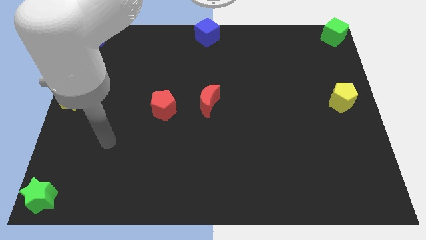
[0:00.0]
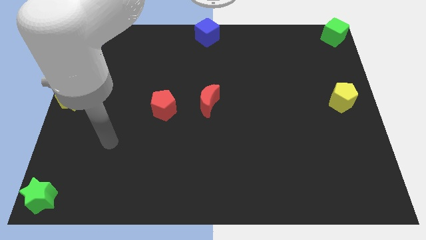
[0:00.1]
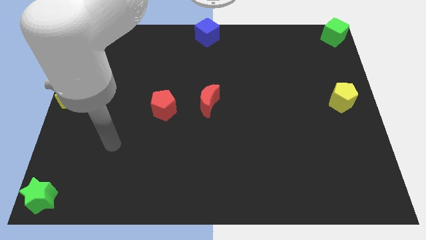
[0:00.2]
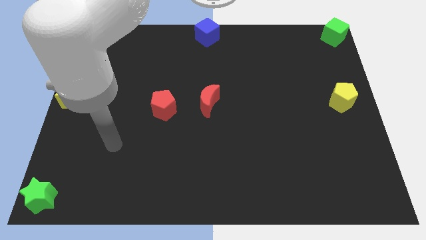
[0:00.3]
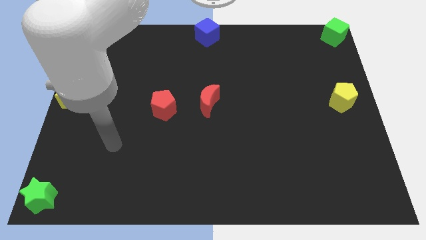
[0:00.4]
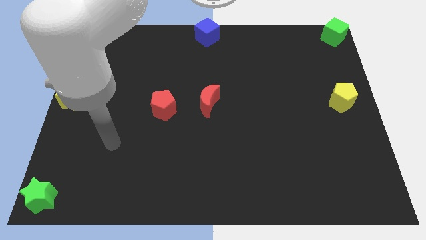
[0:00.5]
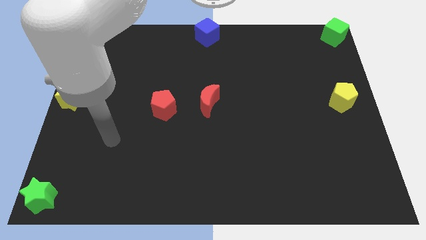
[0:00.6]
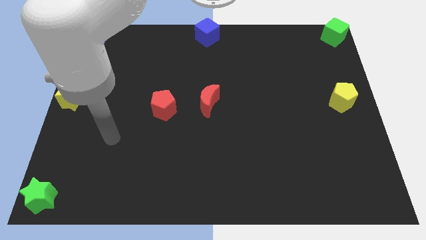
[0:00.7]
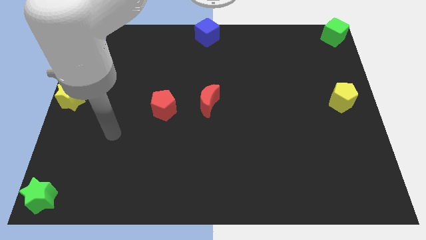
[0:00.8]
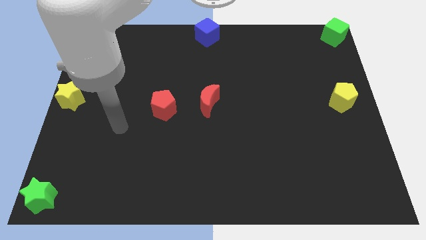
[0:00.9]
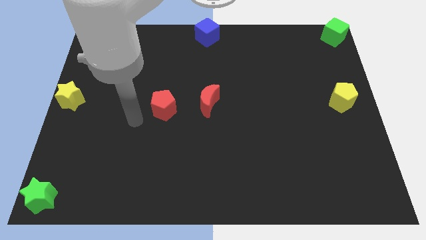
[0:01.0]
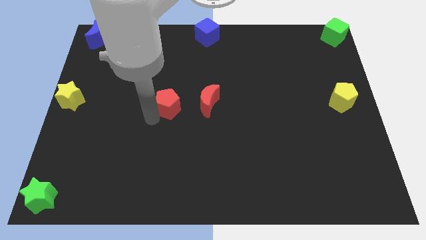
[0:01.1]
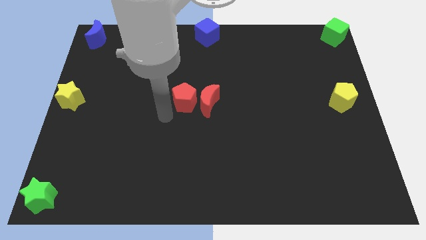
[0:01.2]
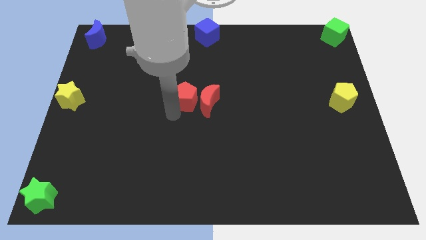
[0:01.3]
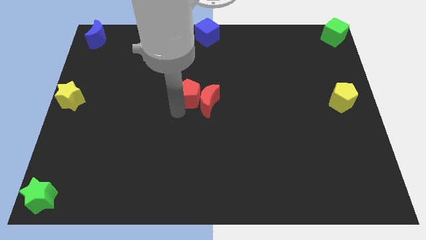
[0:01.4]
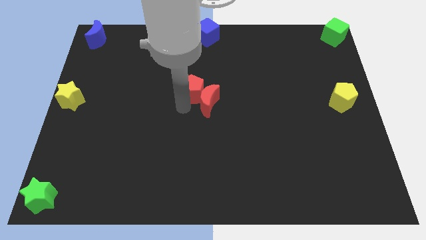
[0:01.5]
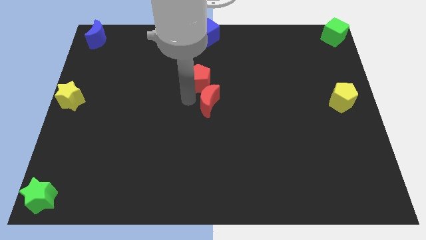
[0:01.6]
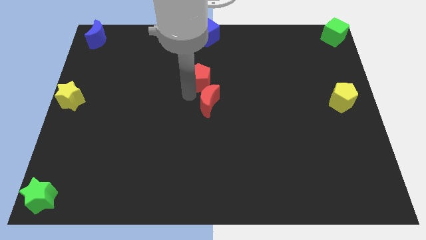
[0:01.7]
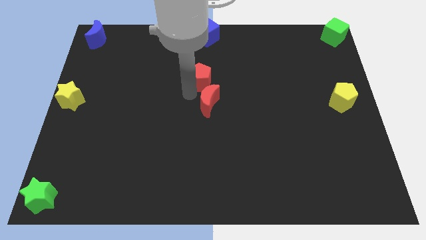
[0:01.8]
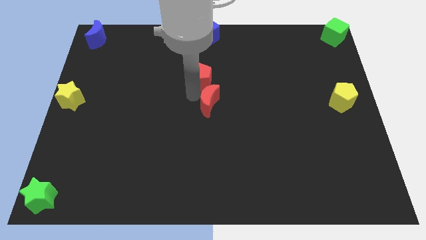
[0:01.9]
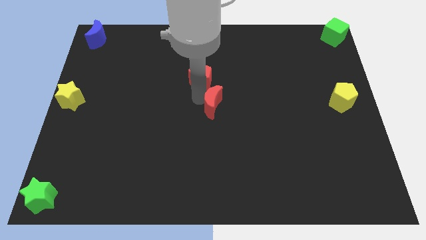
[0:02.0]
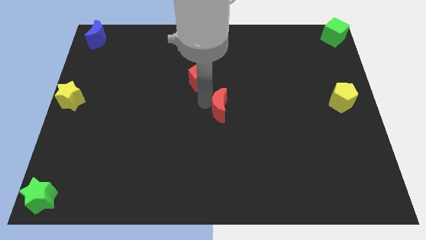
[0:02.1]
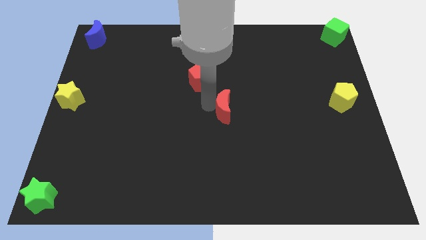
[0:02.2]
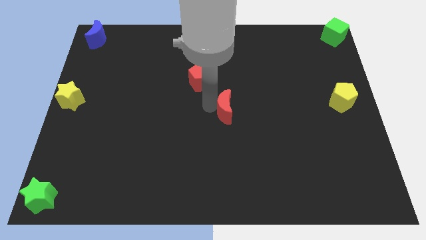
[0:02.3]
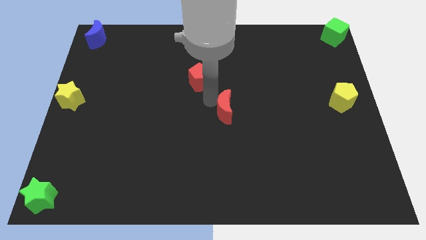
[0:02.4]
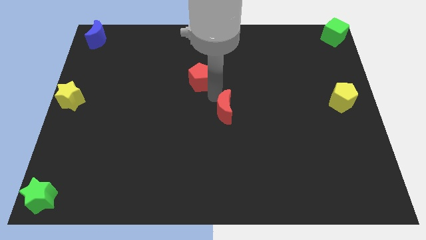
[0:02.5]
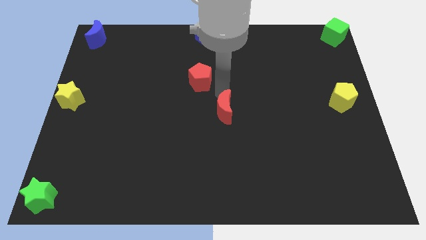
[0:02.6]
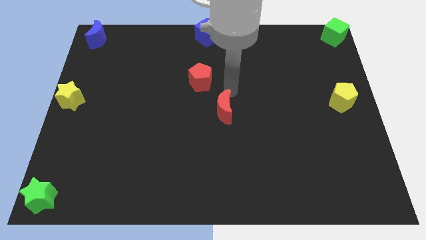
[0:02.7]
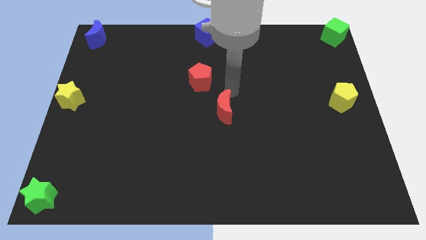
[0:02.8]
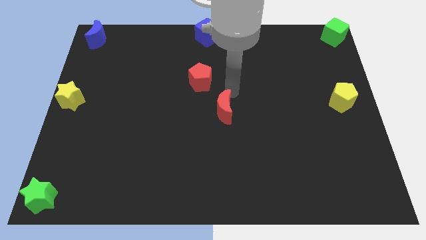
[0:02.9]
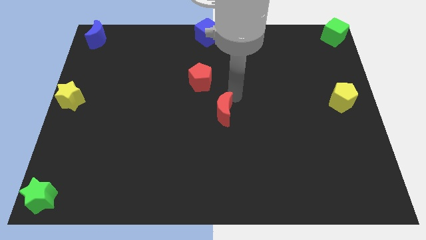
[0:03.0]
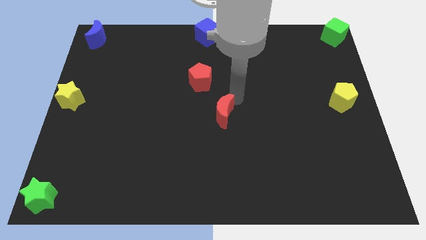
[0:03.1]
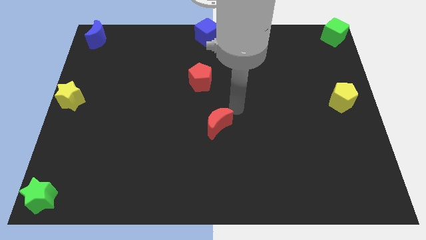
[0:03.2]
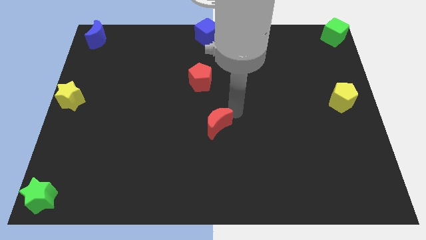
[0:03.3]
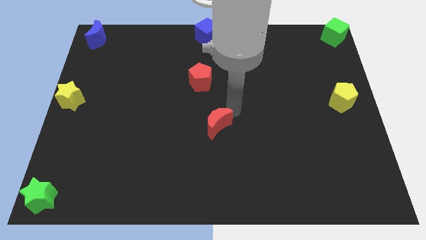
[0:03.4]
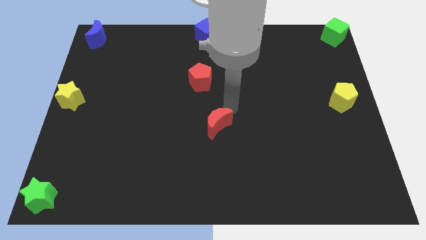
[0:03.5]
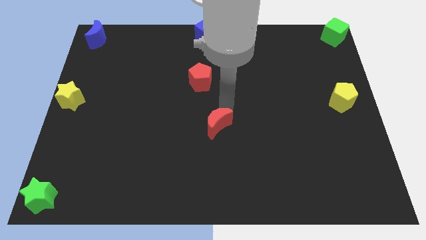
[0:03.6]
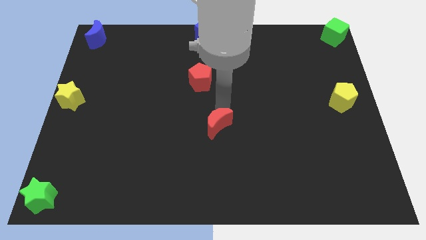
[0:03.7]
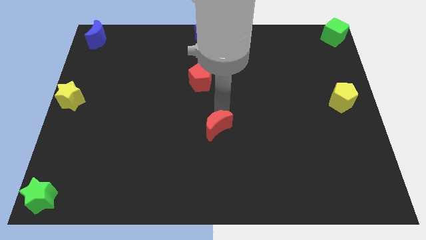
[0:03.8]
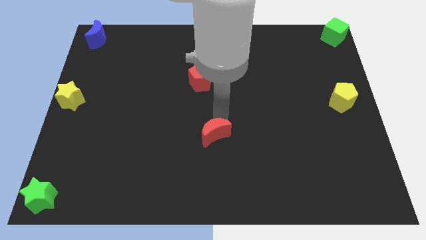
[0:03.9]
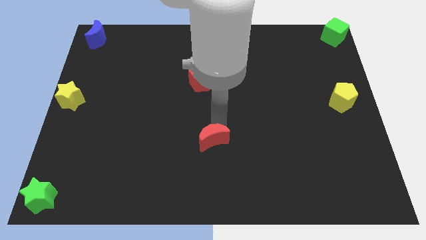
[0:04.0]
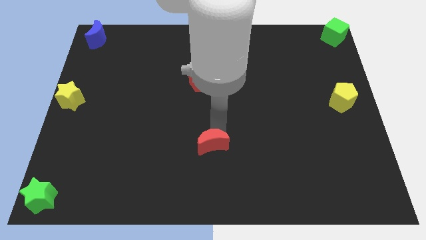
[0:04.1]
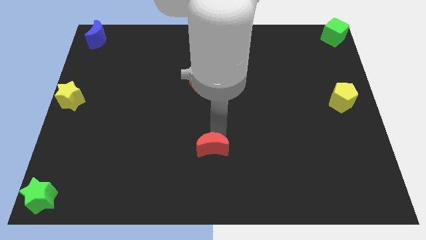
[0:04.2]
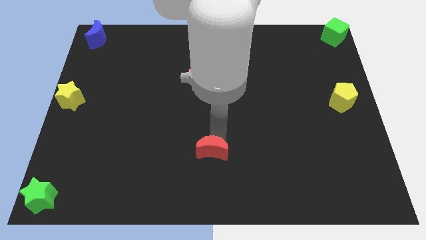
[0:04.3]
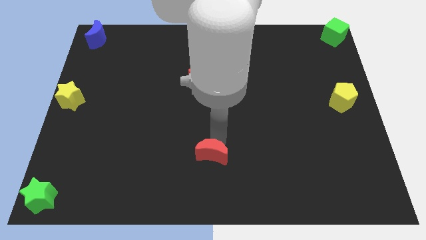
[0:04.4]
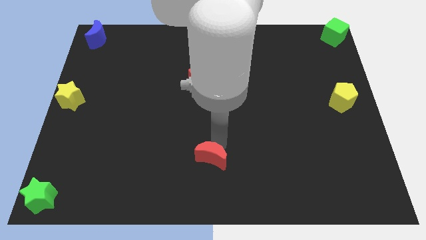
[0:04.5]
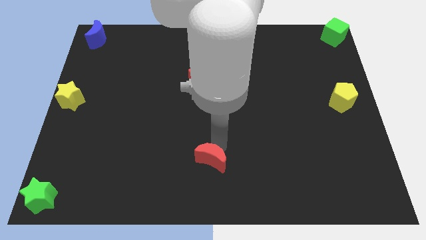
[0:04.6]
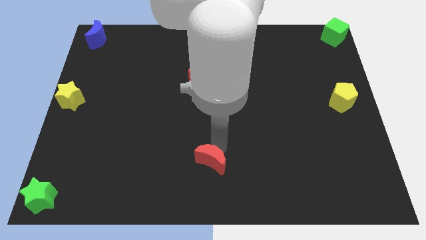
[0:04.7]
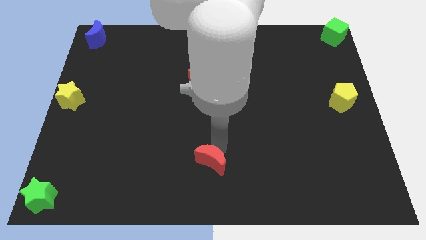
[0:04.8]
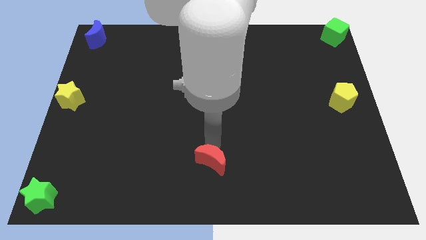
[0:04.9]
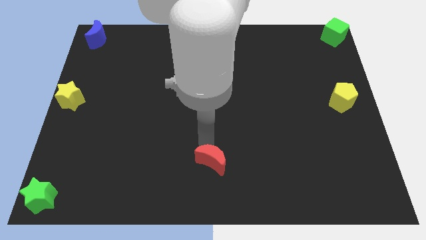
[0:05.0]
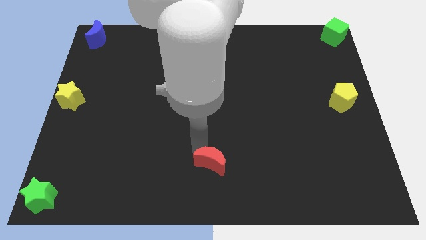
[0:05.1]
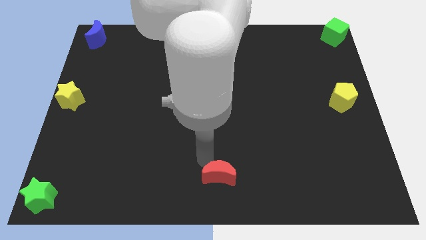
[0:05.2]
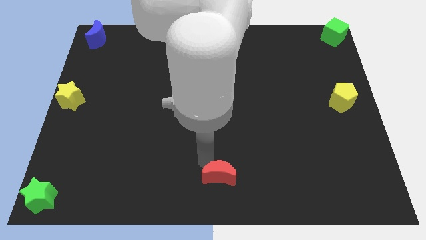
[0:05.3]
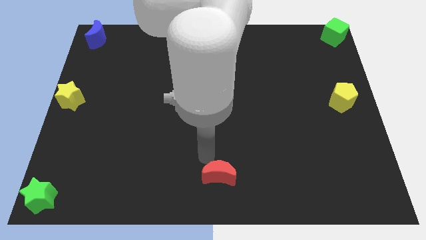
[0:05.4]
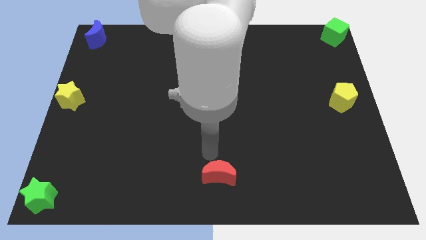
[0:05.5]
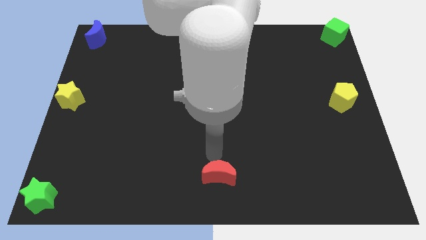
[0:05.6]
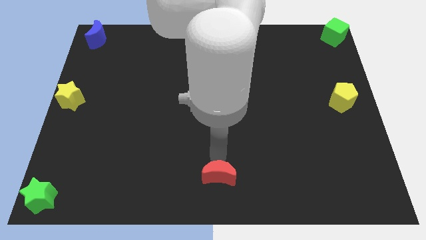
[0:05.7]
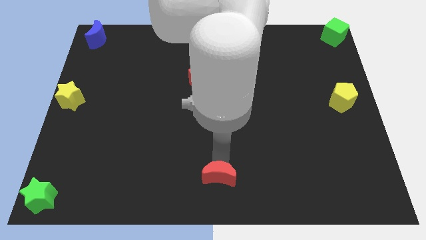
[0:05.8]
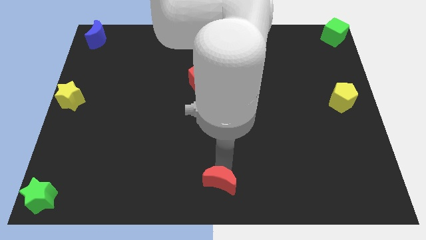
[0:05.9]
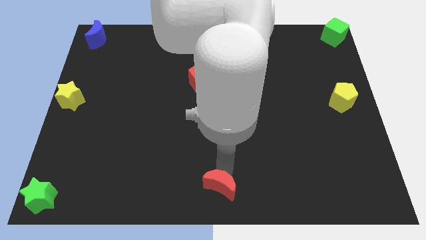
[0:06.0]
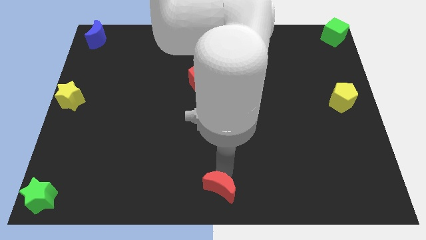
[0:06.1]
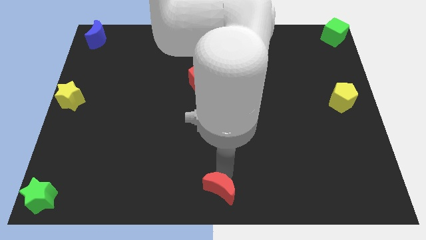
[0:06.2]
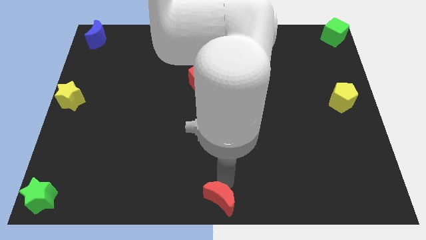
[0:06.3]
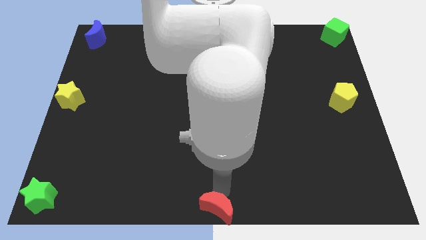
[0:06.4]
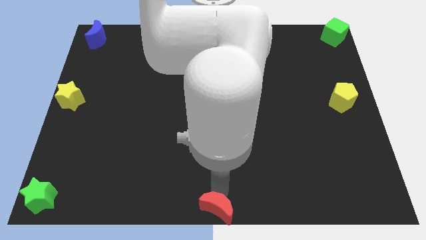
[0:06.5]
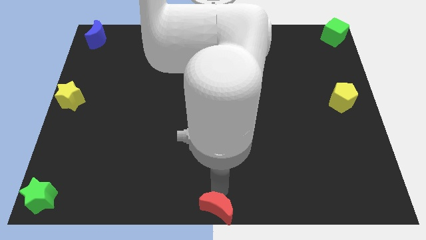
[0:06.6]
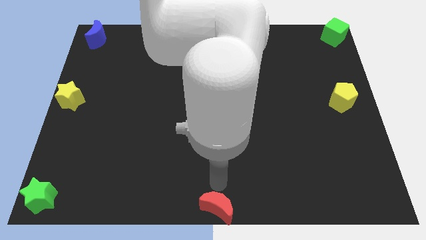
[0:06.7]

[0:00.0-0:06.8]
move the red crescent to the bottom centre of the board

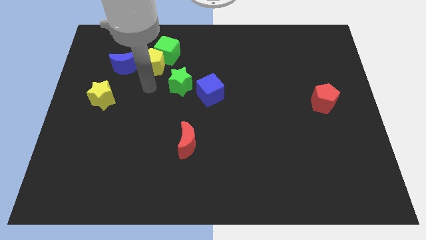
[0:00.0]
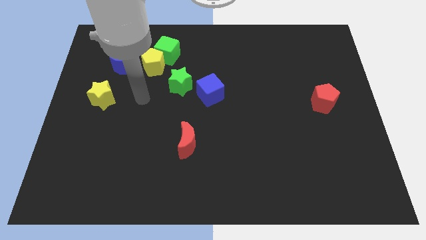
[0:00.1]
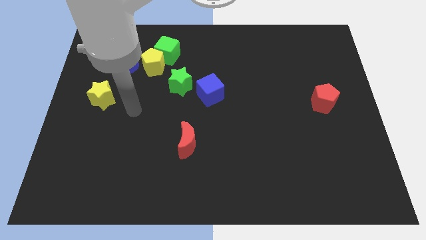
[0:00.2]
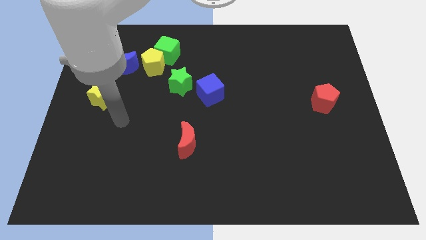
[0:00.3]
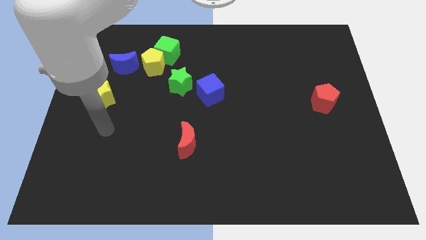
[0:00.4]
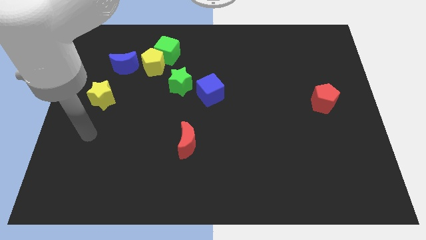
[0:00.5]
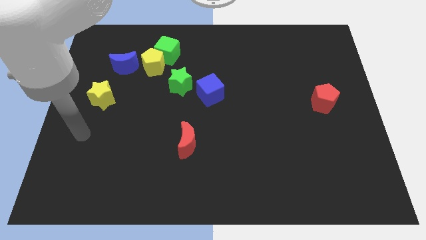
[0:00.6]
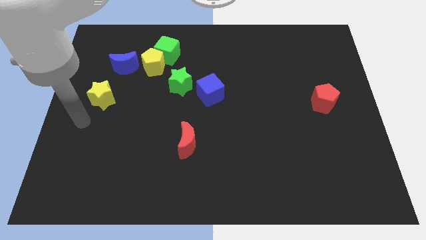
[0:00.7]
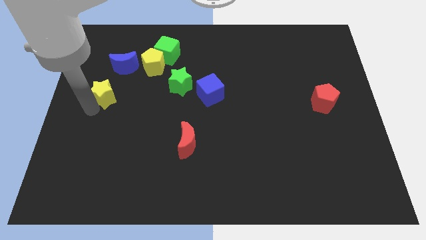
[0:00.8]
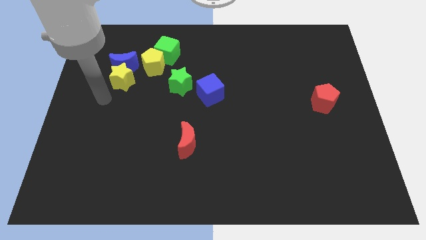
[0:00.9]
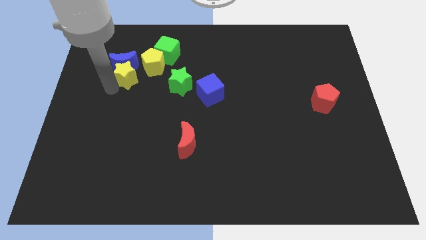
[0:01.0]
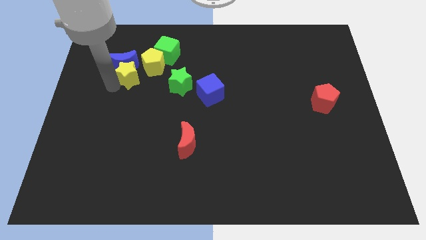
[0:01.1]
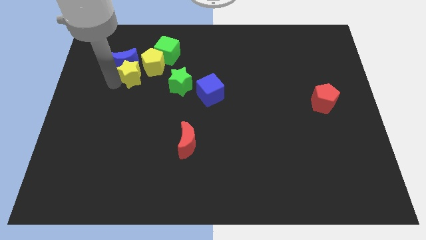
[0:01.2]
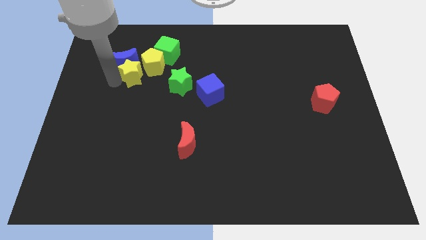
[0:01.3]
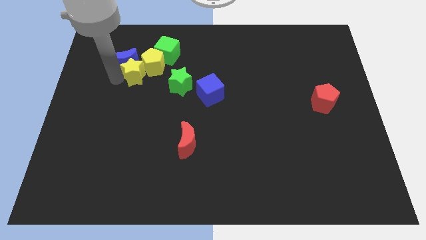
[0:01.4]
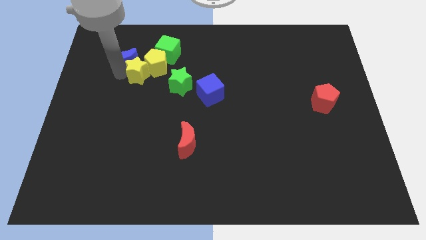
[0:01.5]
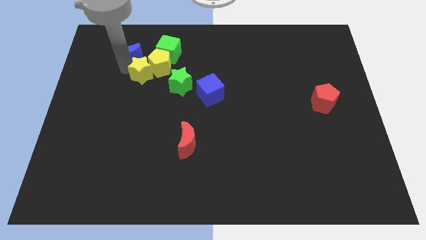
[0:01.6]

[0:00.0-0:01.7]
push the yellow star into yellow pentagon at the bottom

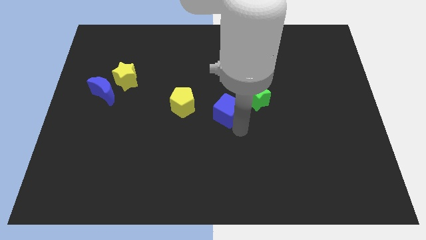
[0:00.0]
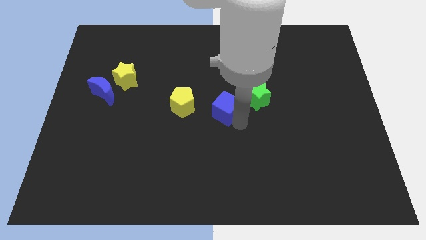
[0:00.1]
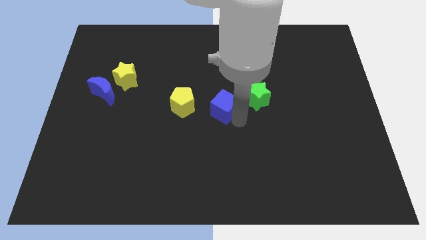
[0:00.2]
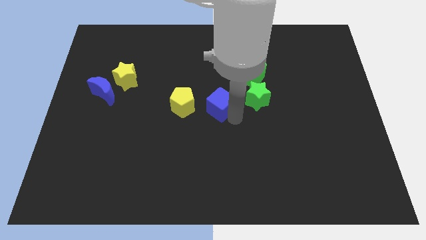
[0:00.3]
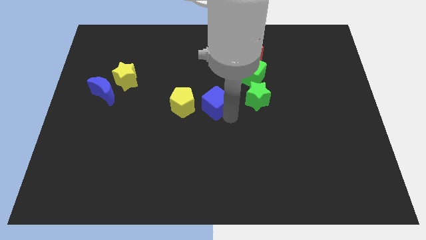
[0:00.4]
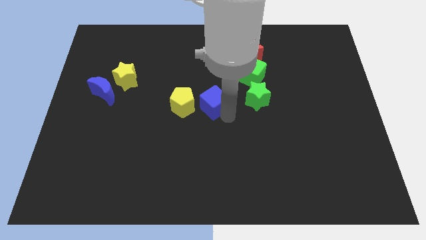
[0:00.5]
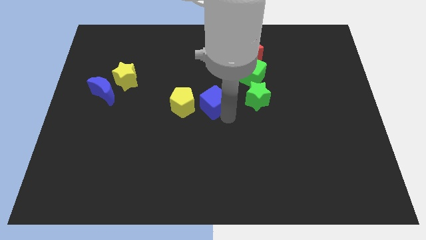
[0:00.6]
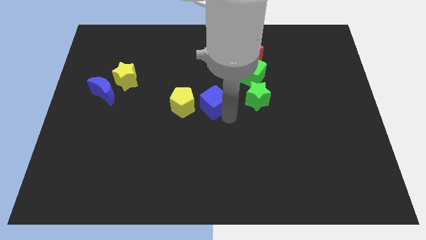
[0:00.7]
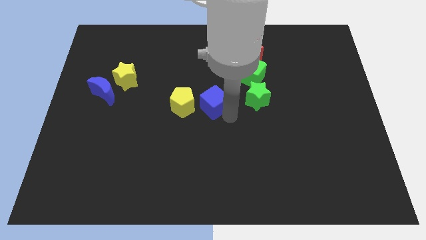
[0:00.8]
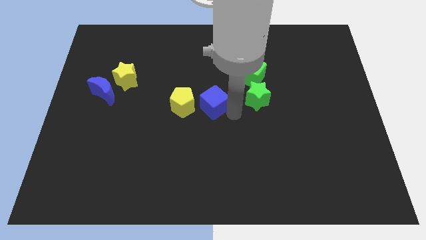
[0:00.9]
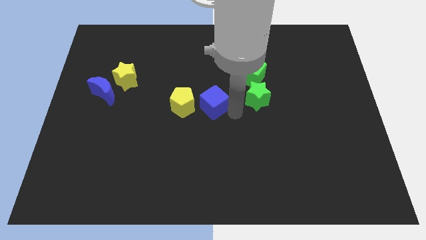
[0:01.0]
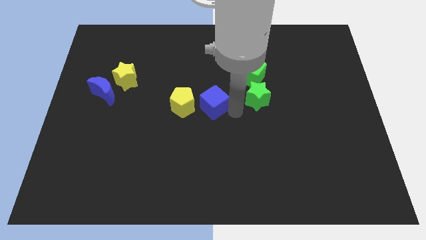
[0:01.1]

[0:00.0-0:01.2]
place blue cube in between the green star and yellow pentagon
